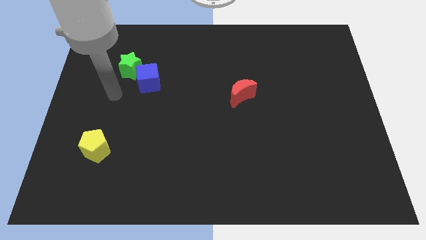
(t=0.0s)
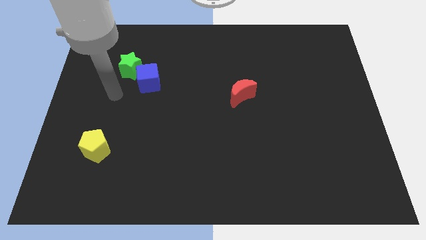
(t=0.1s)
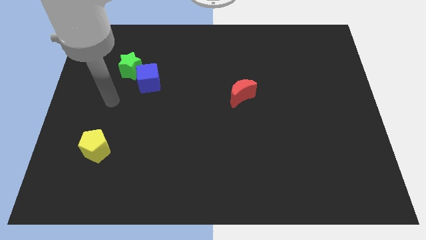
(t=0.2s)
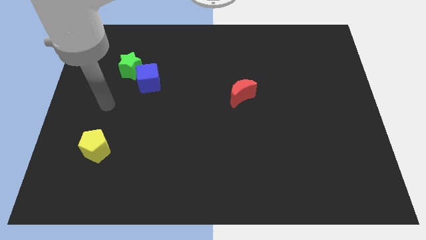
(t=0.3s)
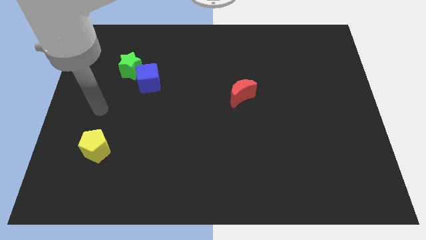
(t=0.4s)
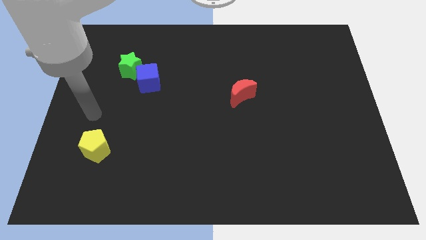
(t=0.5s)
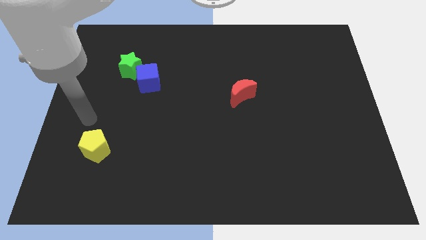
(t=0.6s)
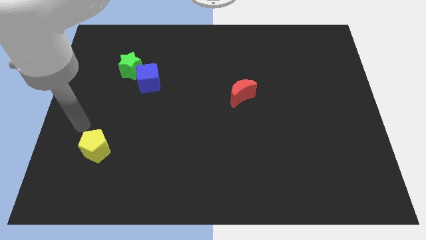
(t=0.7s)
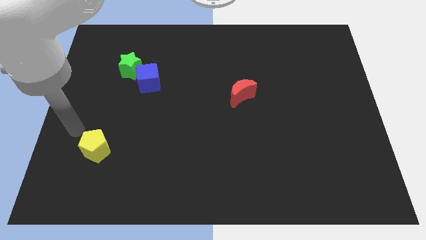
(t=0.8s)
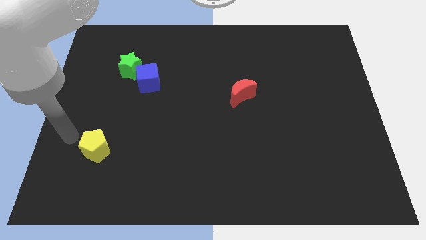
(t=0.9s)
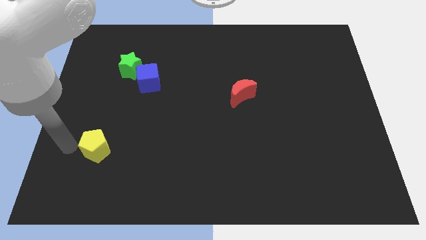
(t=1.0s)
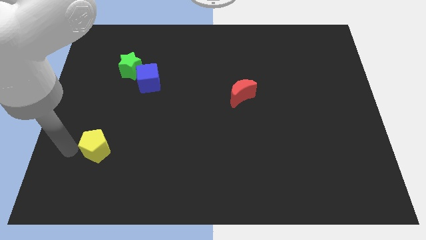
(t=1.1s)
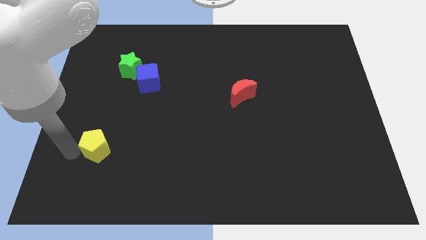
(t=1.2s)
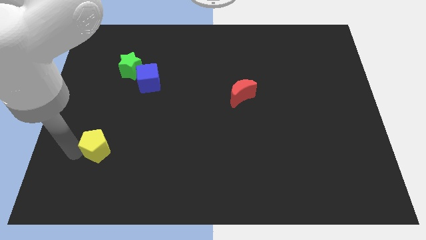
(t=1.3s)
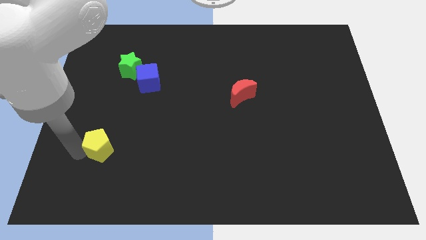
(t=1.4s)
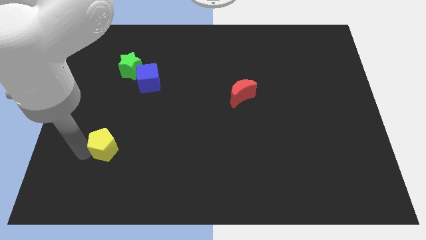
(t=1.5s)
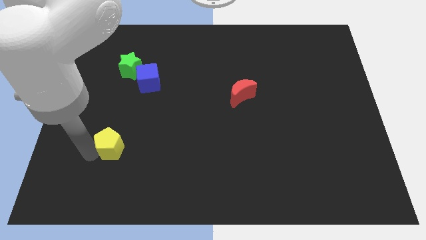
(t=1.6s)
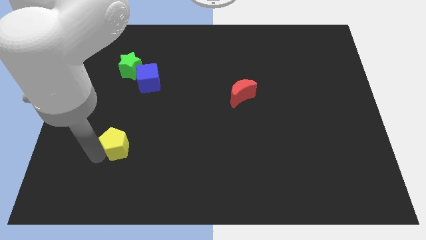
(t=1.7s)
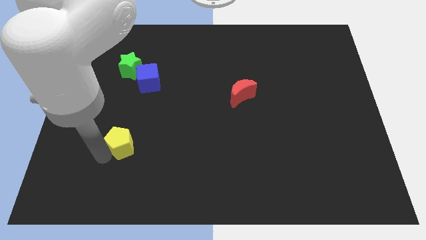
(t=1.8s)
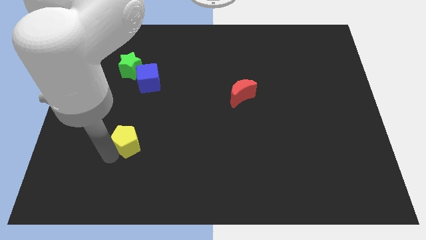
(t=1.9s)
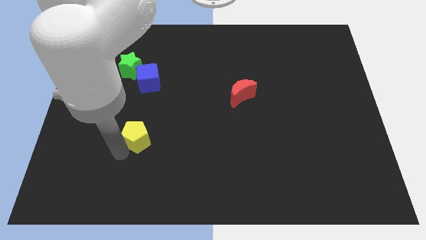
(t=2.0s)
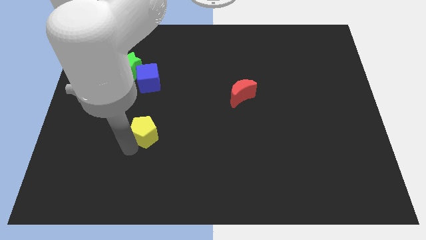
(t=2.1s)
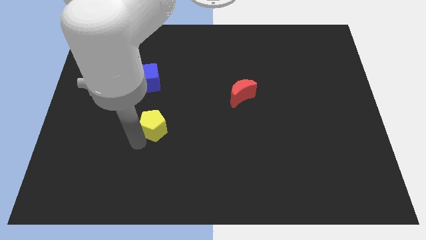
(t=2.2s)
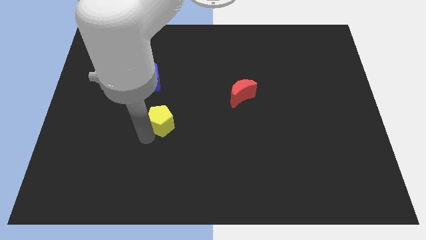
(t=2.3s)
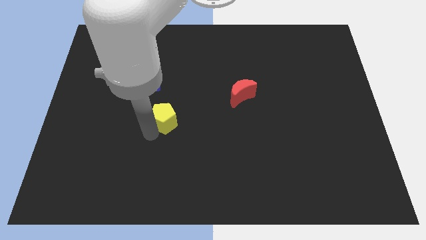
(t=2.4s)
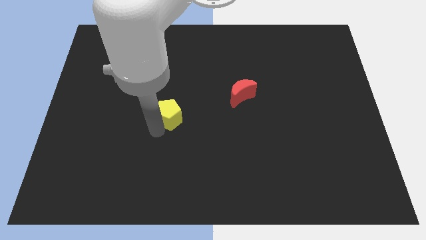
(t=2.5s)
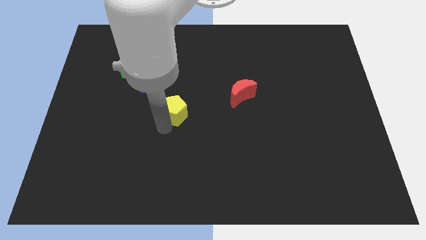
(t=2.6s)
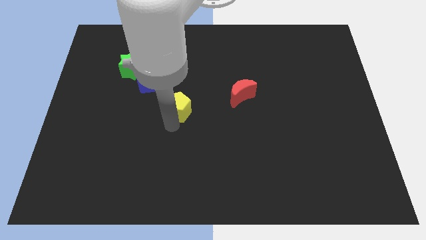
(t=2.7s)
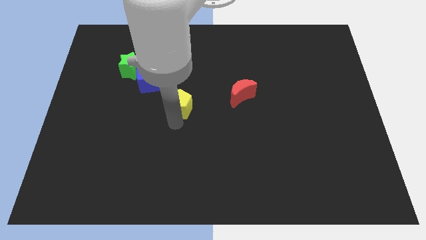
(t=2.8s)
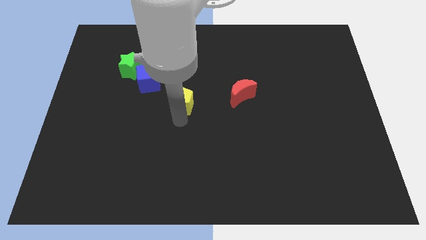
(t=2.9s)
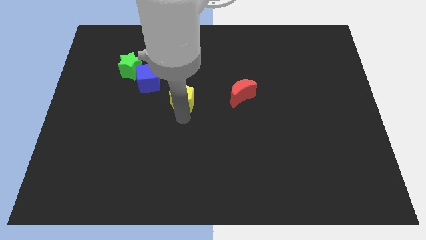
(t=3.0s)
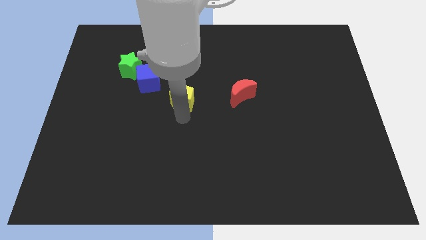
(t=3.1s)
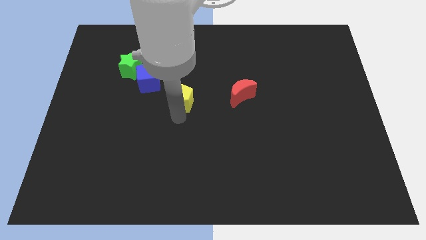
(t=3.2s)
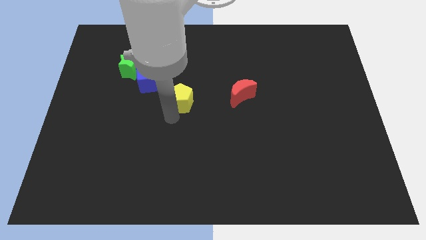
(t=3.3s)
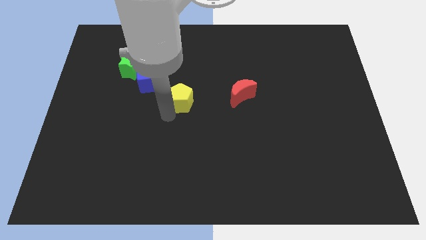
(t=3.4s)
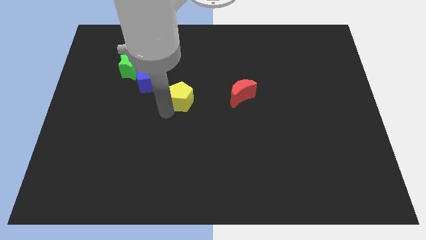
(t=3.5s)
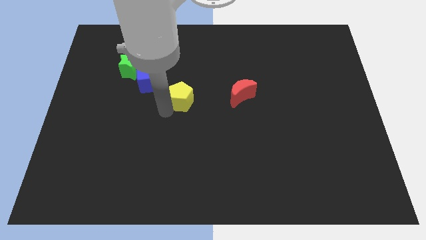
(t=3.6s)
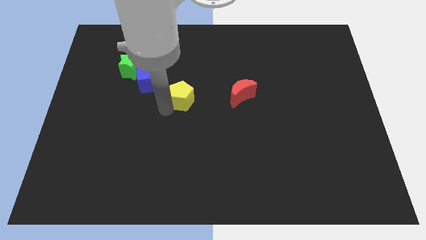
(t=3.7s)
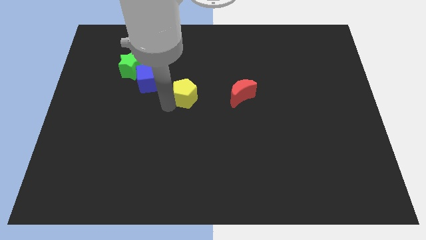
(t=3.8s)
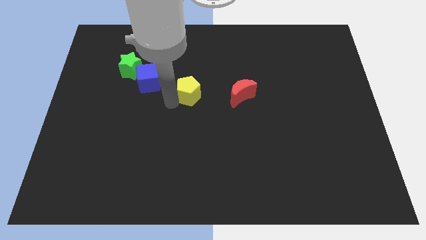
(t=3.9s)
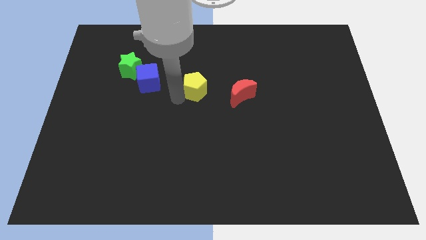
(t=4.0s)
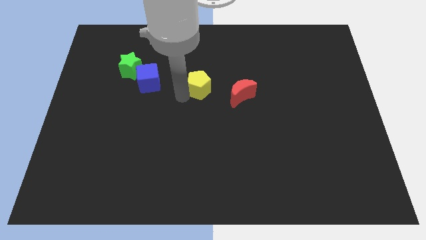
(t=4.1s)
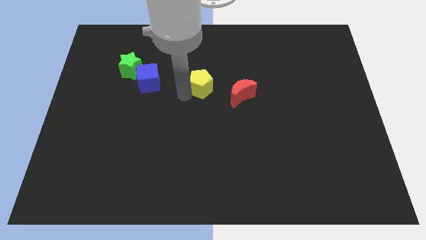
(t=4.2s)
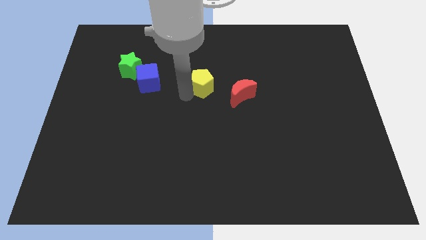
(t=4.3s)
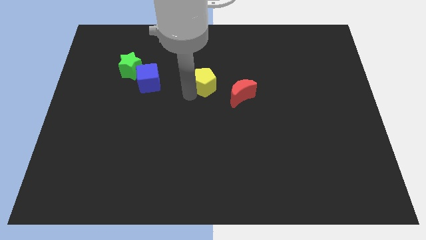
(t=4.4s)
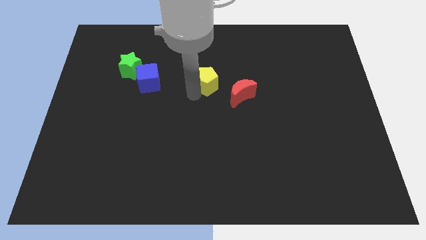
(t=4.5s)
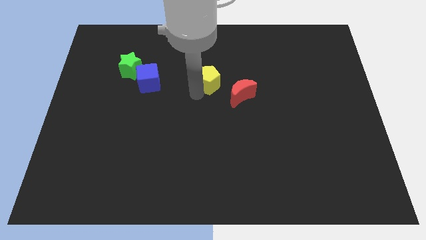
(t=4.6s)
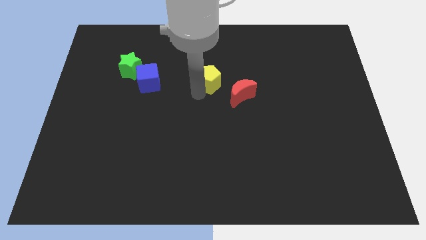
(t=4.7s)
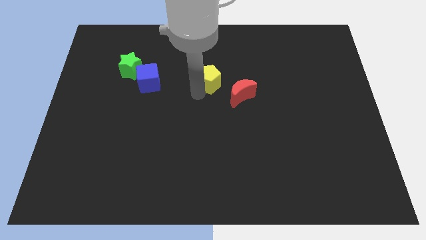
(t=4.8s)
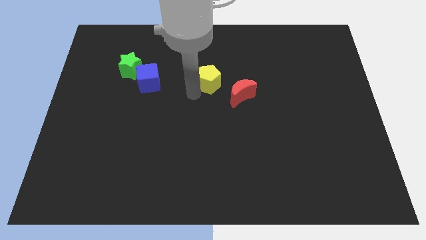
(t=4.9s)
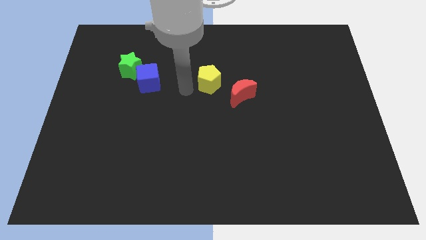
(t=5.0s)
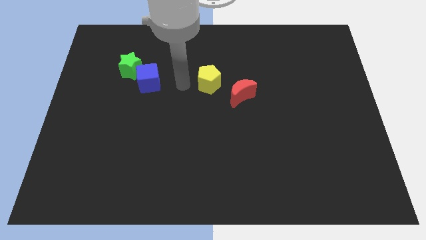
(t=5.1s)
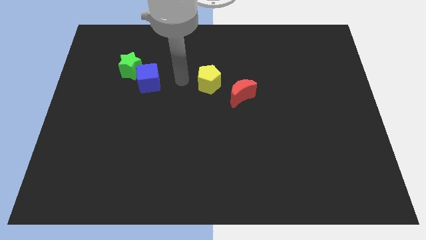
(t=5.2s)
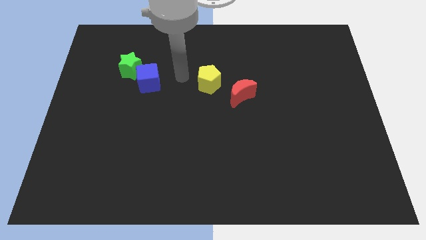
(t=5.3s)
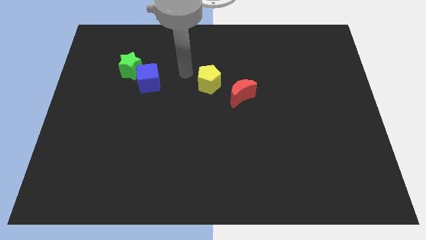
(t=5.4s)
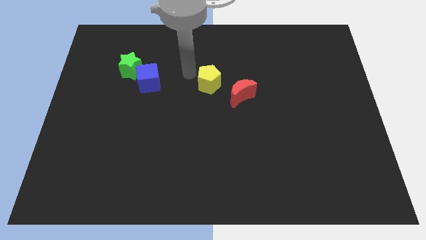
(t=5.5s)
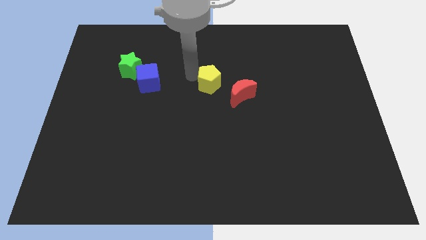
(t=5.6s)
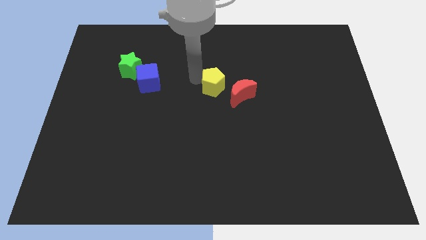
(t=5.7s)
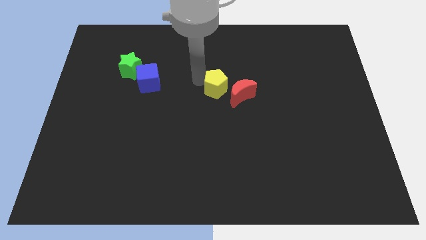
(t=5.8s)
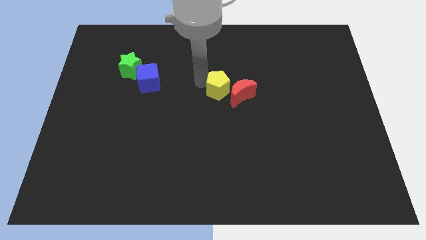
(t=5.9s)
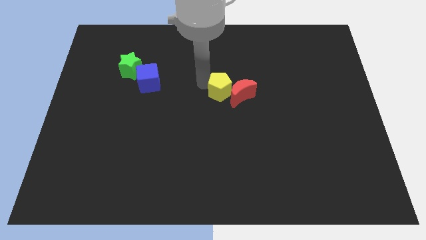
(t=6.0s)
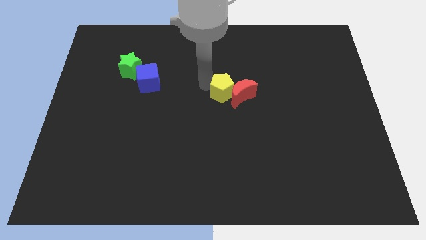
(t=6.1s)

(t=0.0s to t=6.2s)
put the pentagon towards the red block

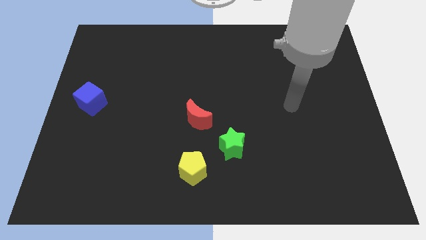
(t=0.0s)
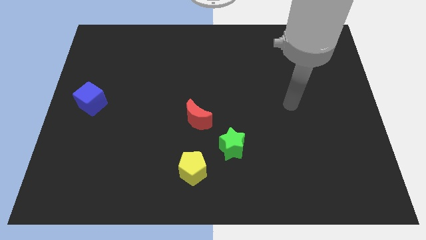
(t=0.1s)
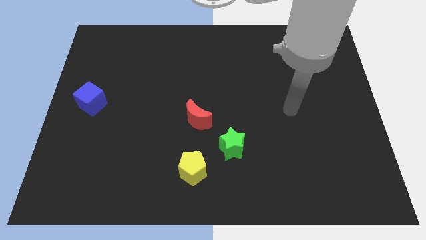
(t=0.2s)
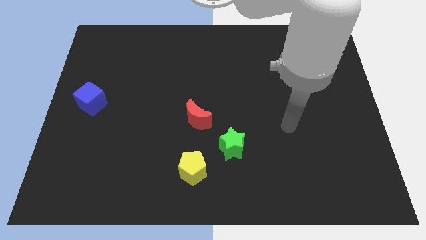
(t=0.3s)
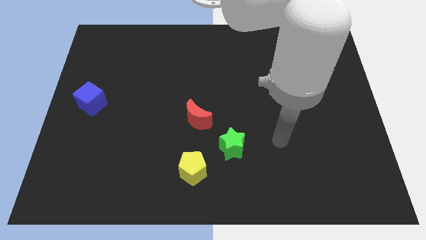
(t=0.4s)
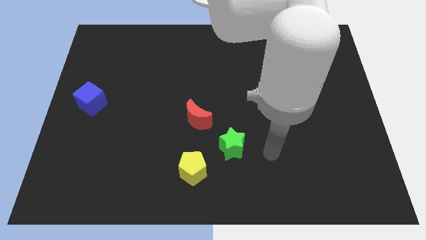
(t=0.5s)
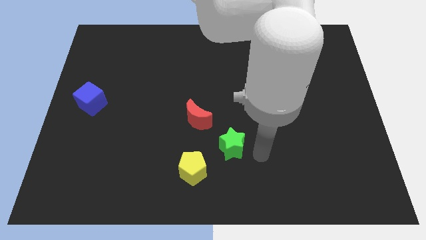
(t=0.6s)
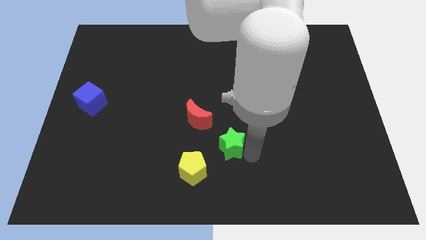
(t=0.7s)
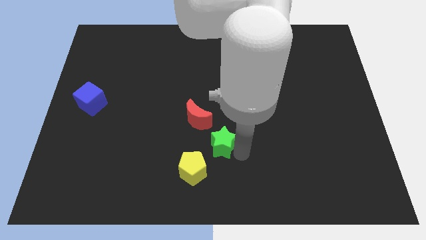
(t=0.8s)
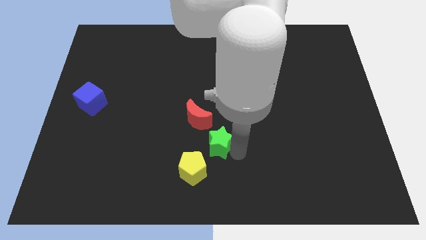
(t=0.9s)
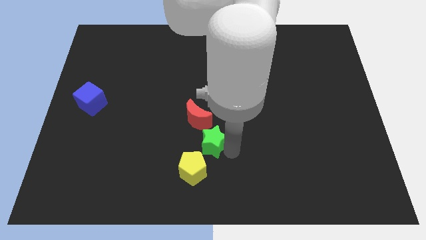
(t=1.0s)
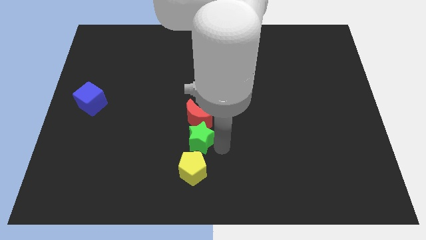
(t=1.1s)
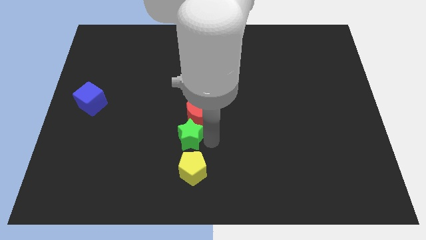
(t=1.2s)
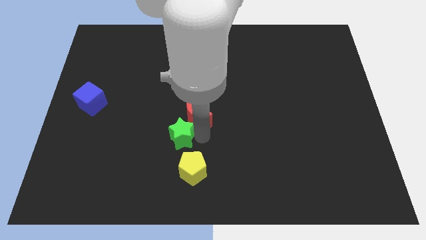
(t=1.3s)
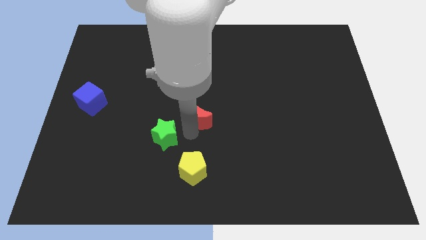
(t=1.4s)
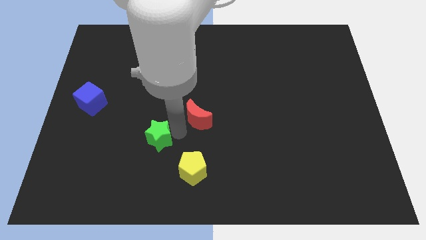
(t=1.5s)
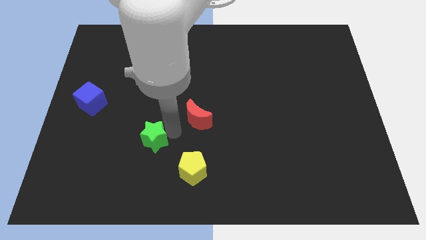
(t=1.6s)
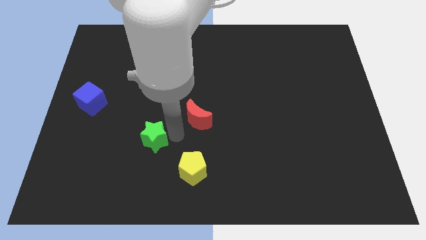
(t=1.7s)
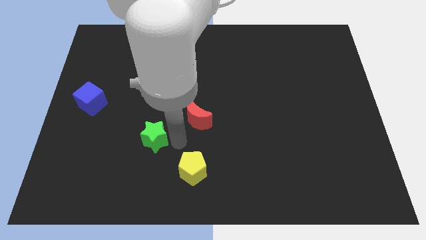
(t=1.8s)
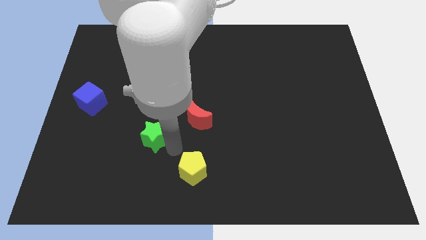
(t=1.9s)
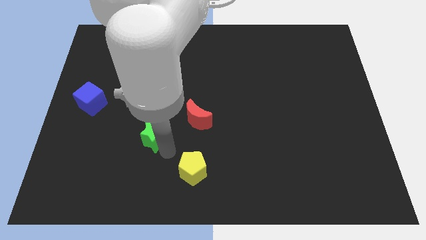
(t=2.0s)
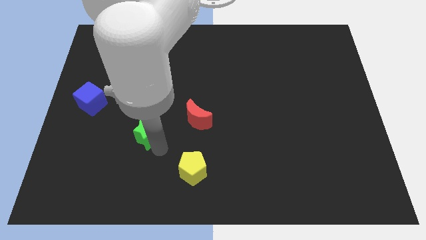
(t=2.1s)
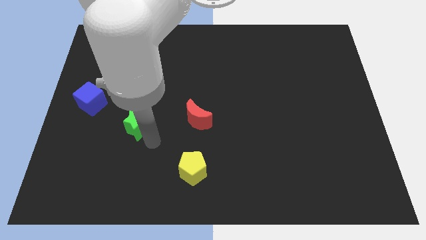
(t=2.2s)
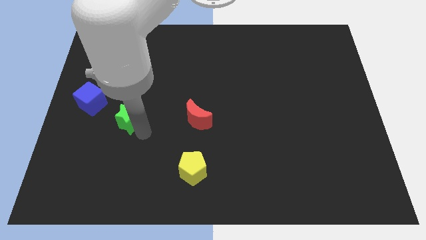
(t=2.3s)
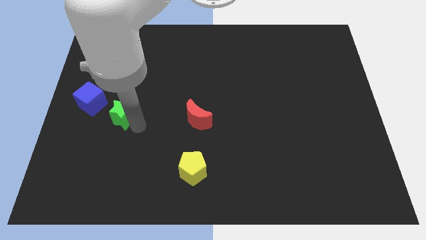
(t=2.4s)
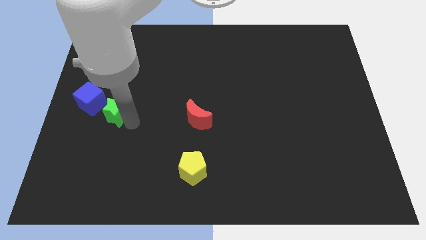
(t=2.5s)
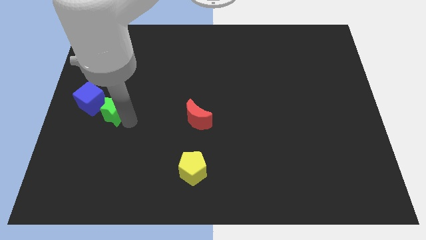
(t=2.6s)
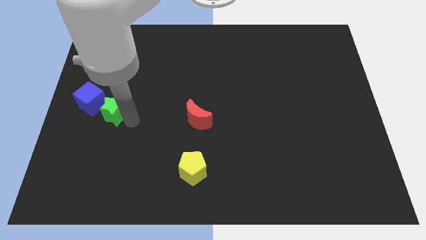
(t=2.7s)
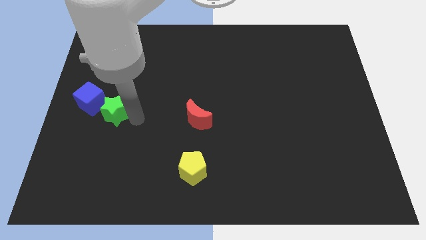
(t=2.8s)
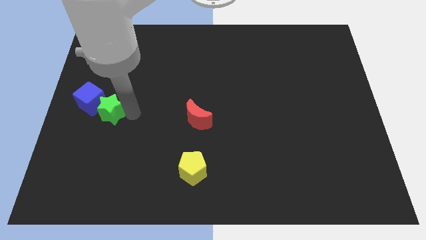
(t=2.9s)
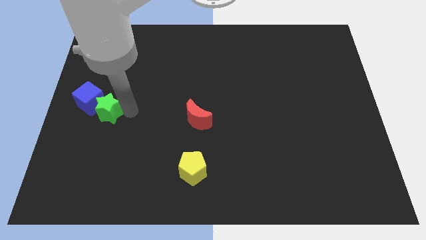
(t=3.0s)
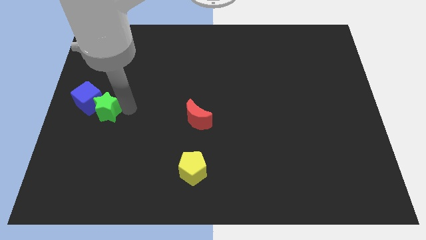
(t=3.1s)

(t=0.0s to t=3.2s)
put the star close to the blue block
